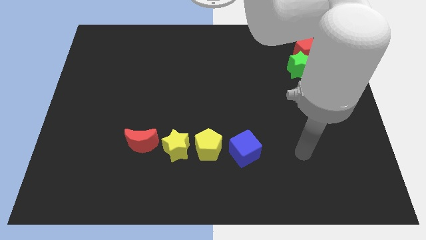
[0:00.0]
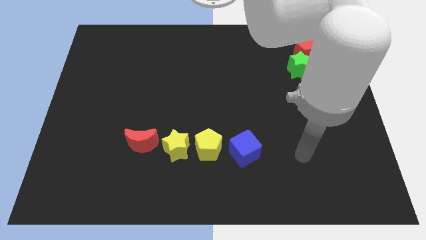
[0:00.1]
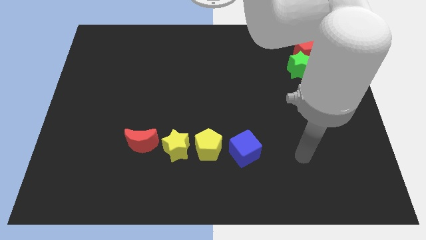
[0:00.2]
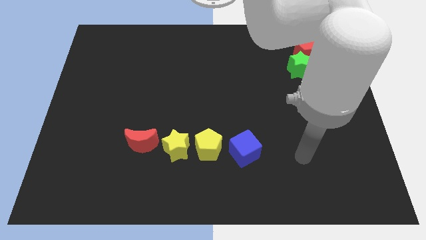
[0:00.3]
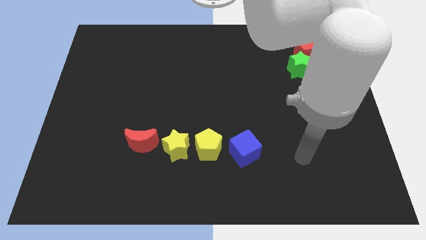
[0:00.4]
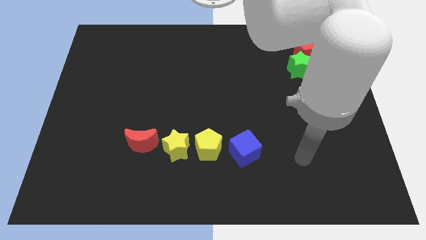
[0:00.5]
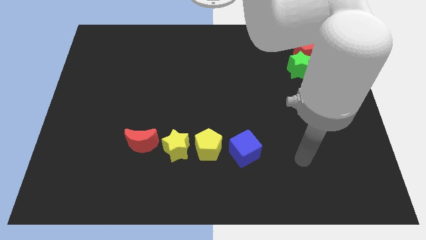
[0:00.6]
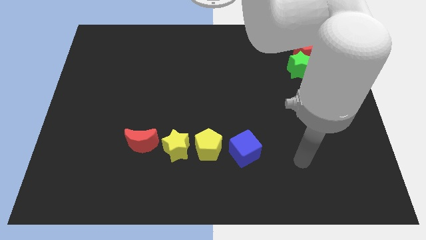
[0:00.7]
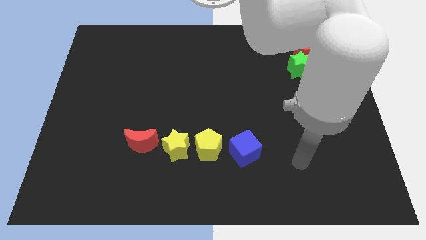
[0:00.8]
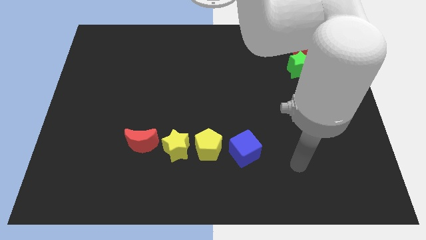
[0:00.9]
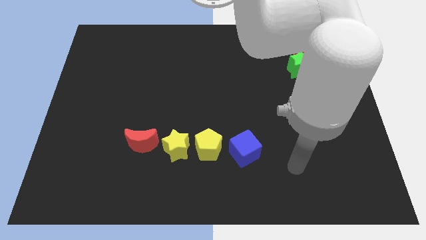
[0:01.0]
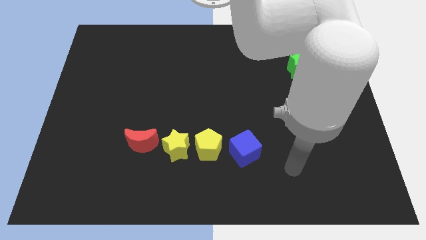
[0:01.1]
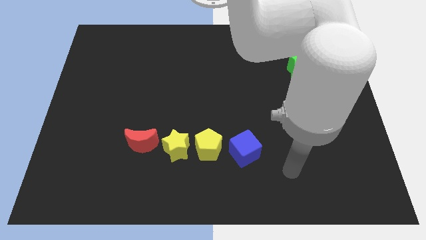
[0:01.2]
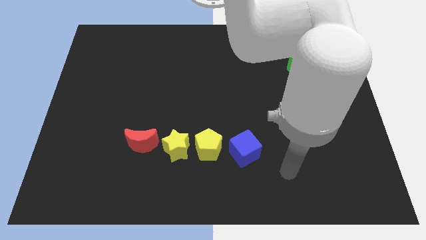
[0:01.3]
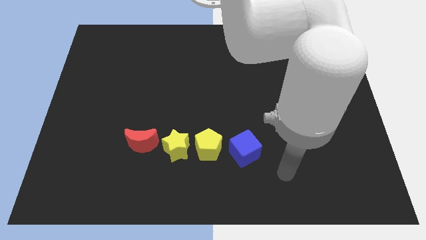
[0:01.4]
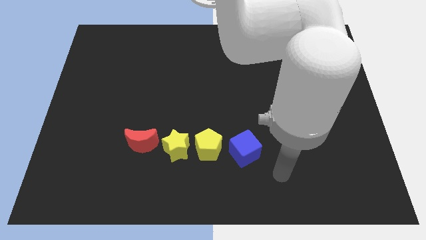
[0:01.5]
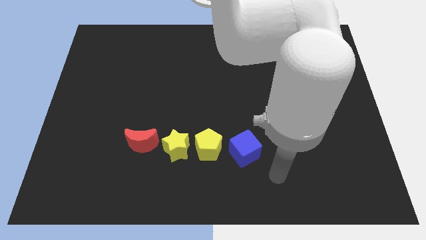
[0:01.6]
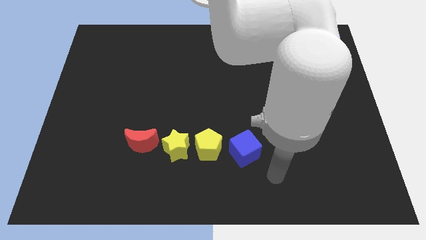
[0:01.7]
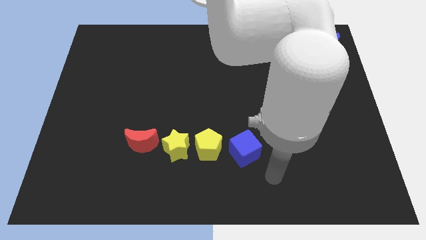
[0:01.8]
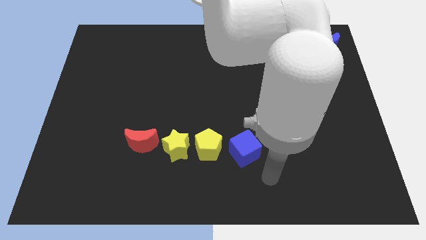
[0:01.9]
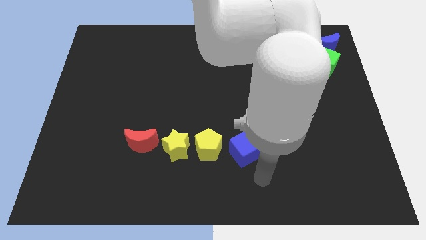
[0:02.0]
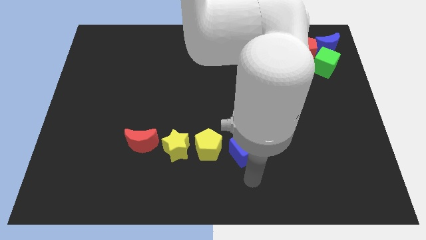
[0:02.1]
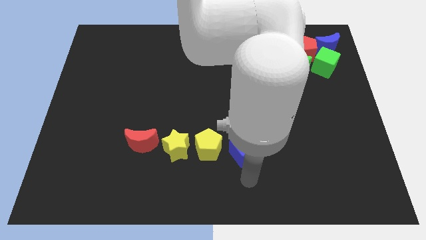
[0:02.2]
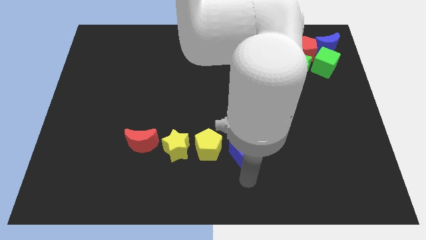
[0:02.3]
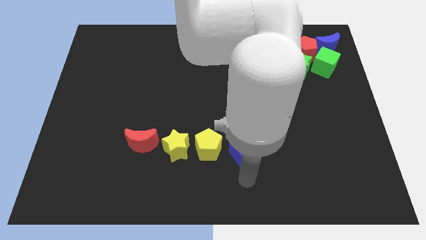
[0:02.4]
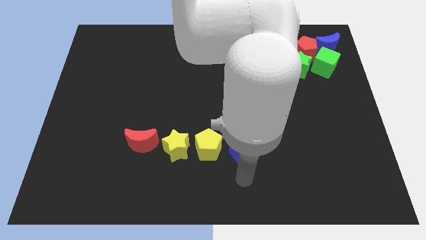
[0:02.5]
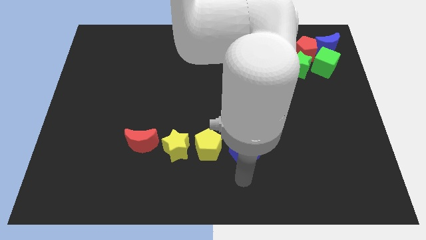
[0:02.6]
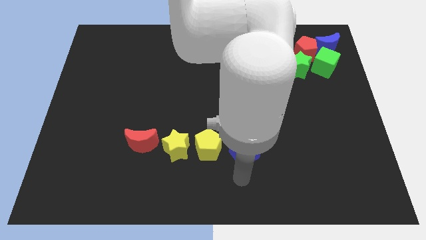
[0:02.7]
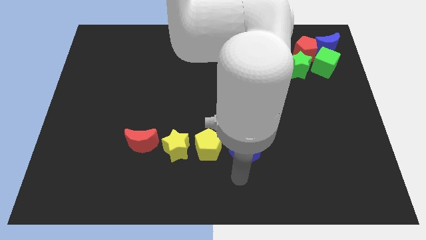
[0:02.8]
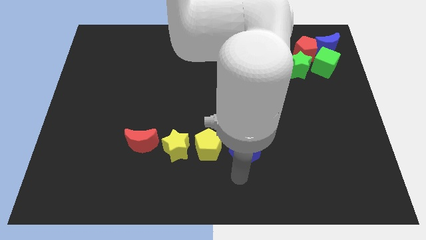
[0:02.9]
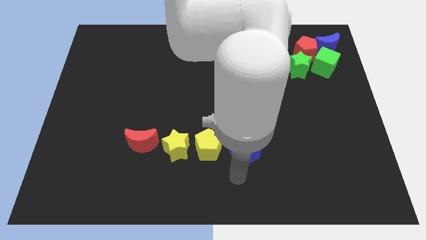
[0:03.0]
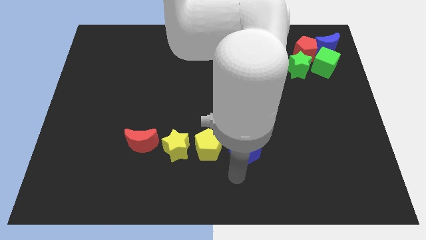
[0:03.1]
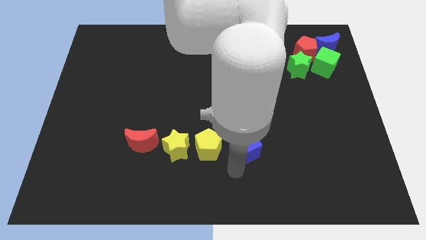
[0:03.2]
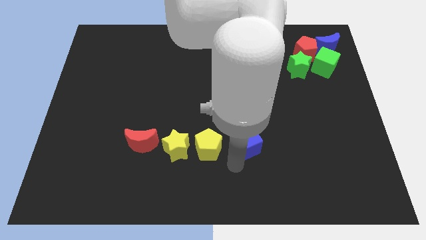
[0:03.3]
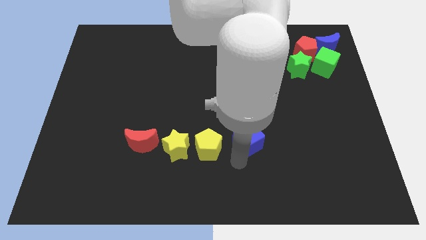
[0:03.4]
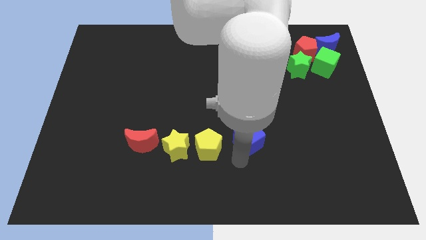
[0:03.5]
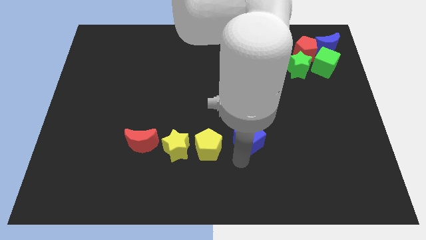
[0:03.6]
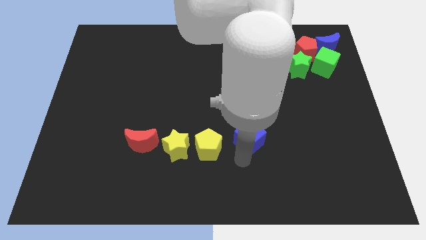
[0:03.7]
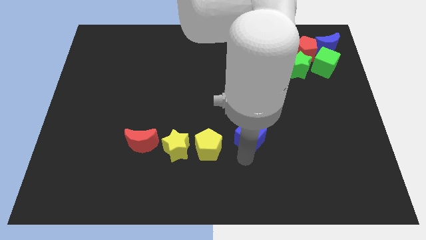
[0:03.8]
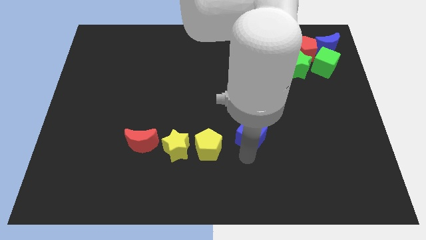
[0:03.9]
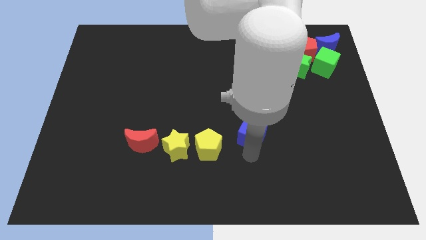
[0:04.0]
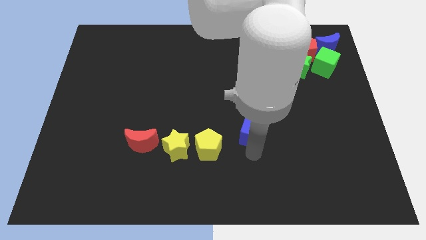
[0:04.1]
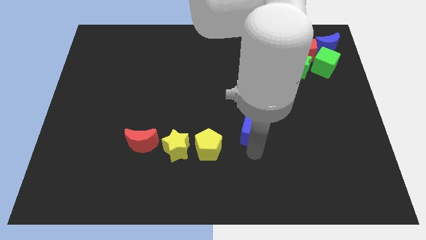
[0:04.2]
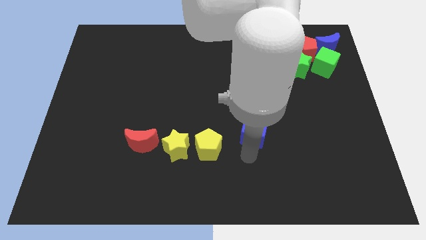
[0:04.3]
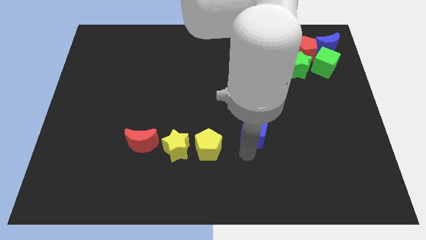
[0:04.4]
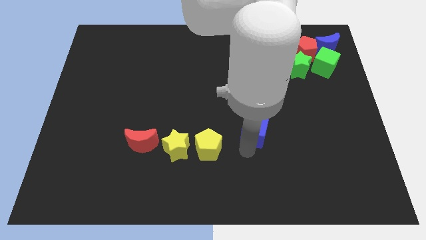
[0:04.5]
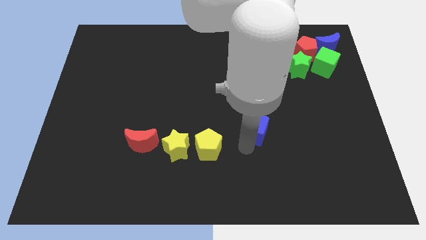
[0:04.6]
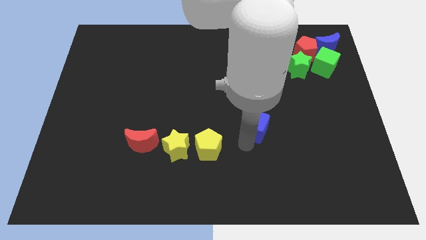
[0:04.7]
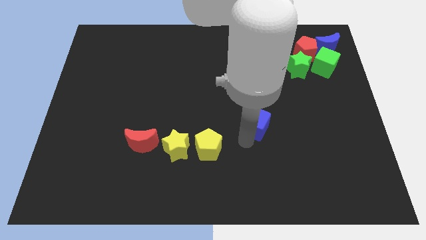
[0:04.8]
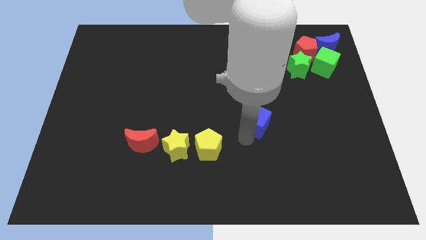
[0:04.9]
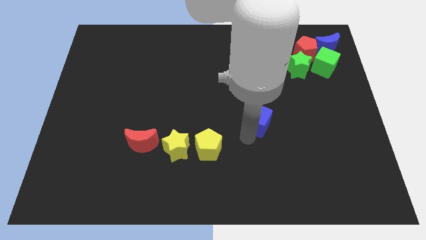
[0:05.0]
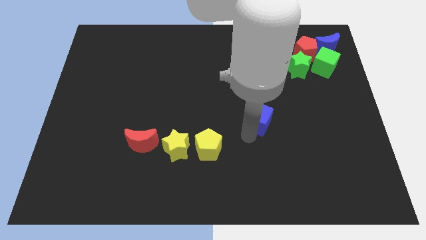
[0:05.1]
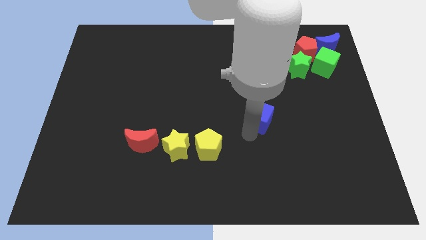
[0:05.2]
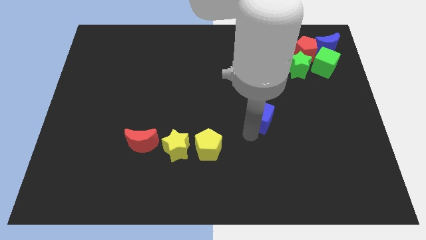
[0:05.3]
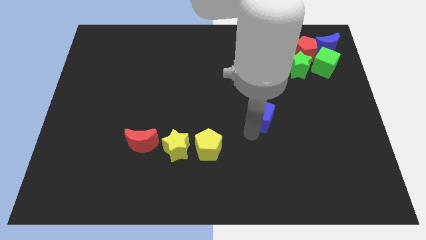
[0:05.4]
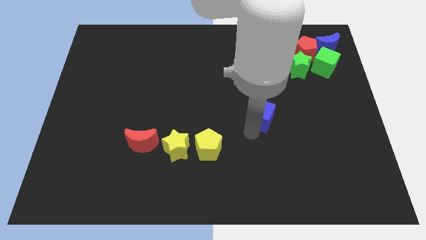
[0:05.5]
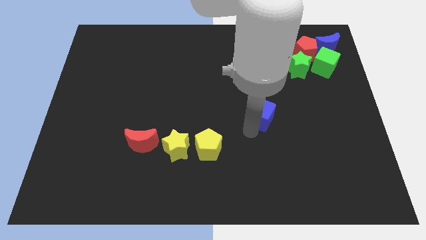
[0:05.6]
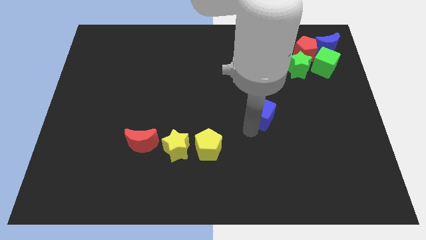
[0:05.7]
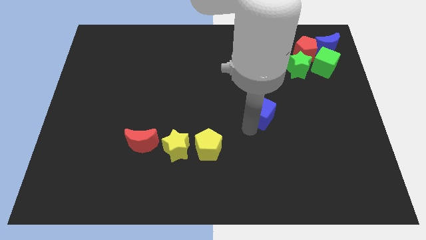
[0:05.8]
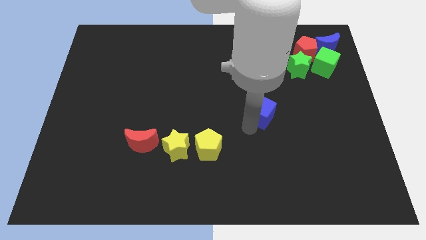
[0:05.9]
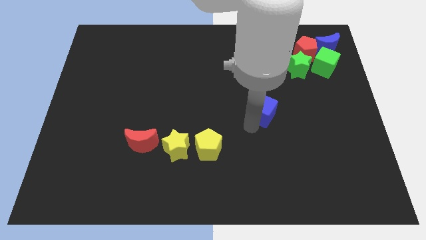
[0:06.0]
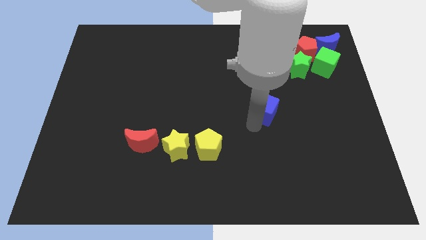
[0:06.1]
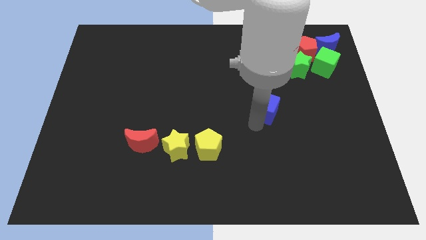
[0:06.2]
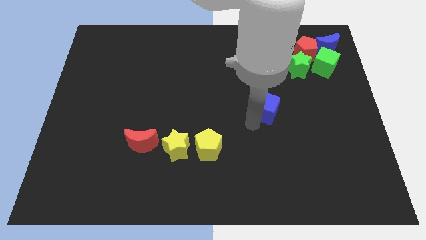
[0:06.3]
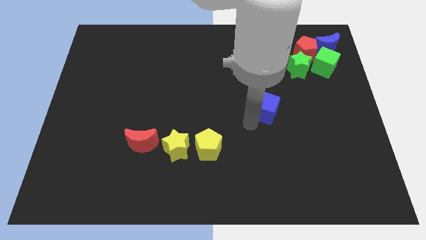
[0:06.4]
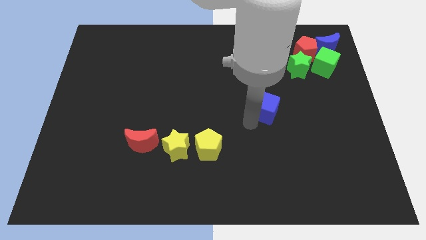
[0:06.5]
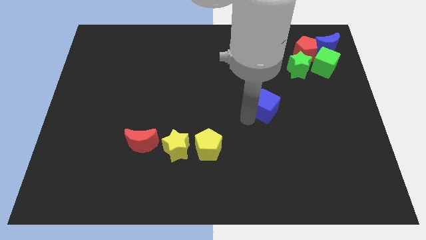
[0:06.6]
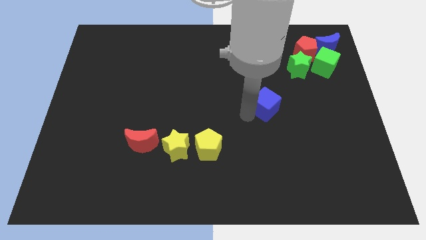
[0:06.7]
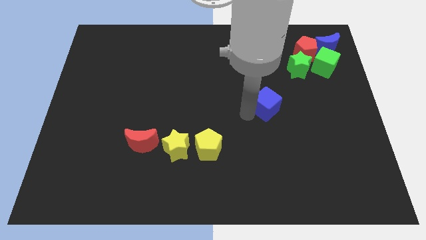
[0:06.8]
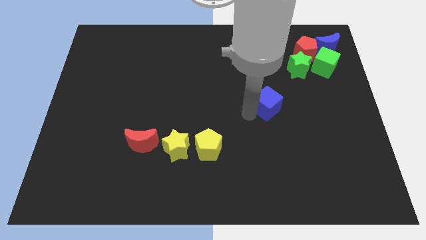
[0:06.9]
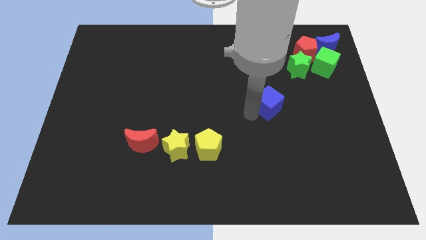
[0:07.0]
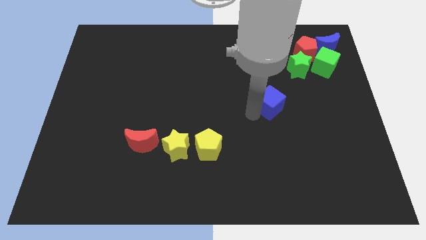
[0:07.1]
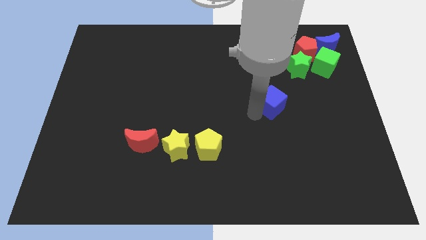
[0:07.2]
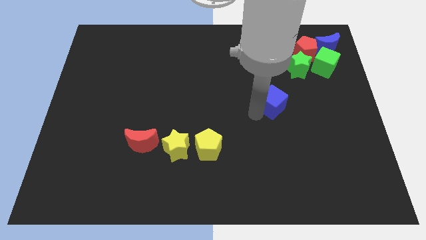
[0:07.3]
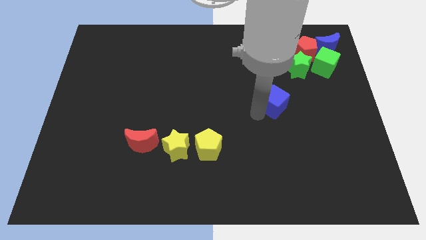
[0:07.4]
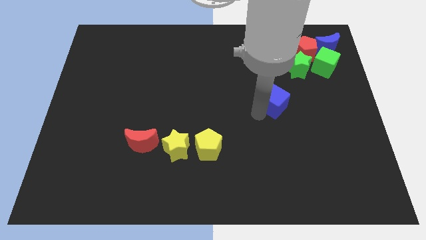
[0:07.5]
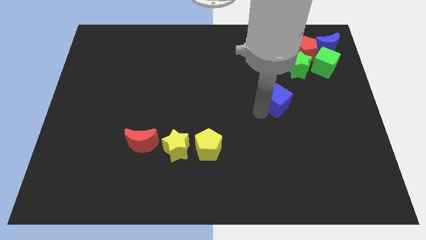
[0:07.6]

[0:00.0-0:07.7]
place the blue cube to the bottom left of the green star

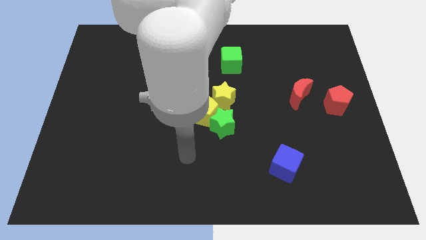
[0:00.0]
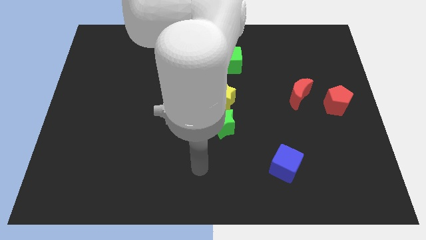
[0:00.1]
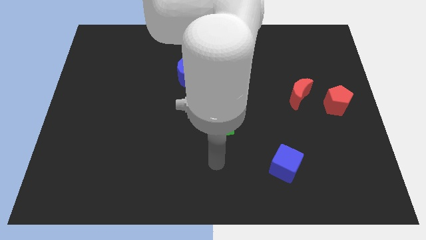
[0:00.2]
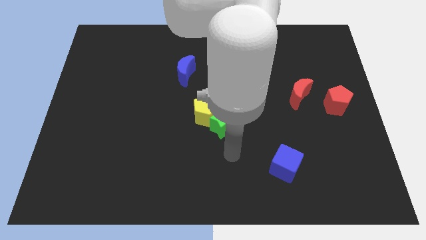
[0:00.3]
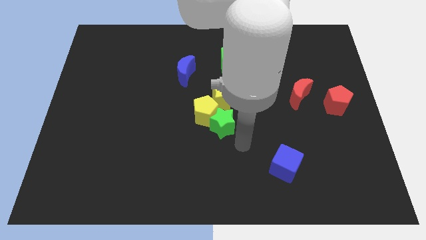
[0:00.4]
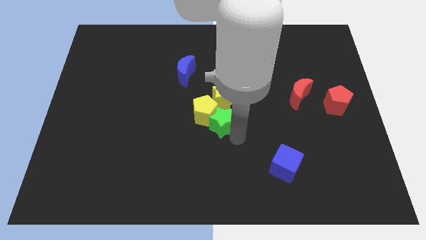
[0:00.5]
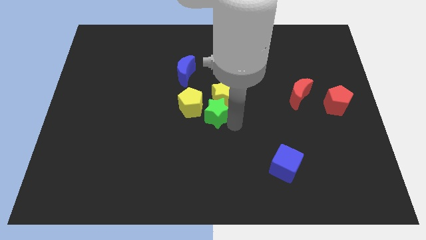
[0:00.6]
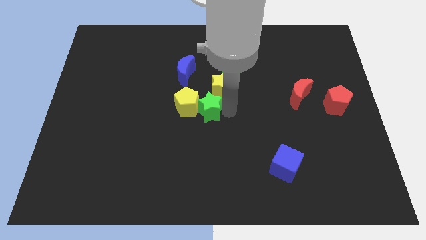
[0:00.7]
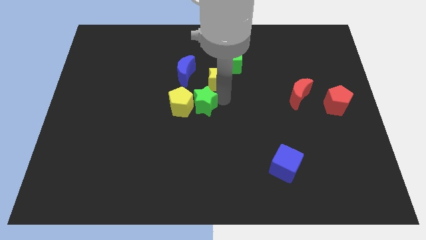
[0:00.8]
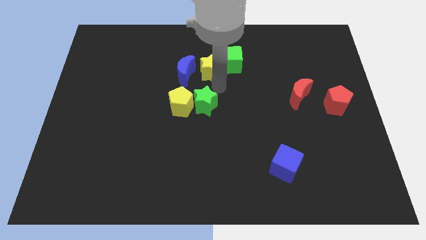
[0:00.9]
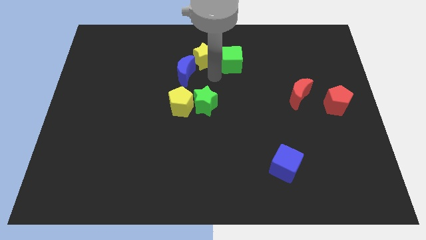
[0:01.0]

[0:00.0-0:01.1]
separate yellow star from green star

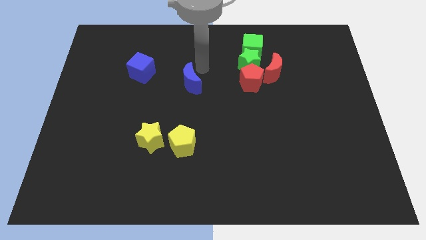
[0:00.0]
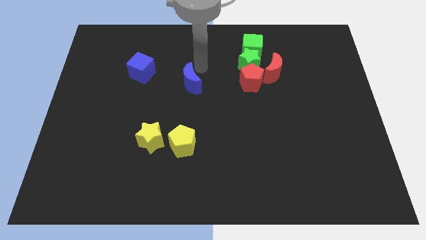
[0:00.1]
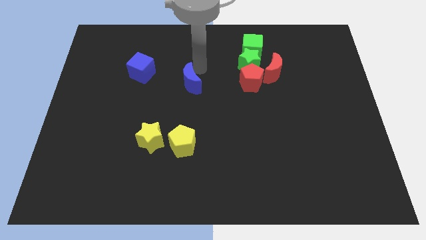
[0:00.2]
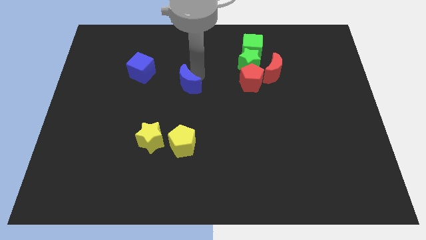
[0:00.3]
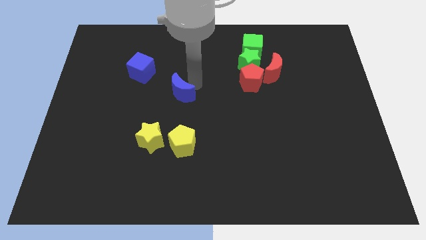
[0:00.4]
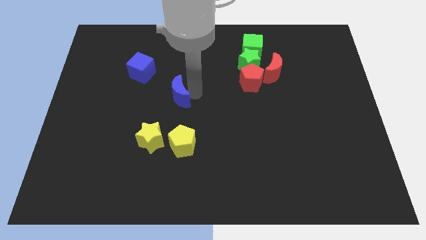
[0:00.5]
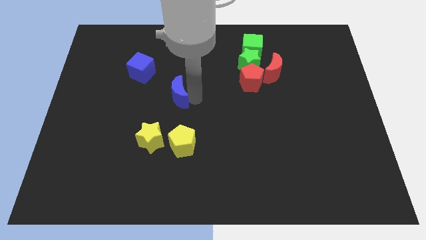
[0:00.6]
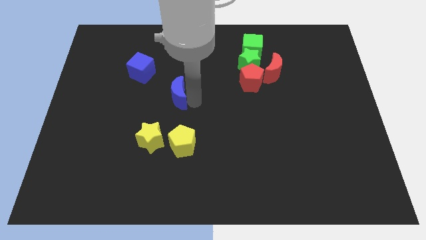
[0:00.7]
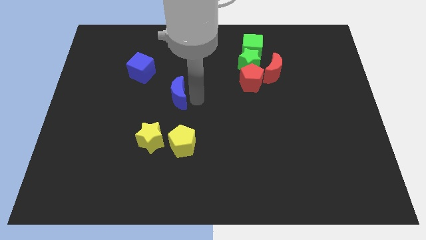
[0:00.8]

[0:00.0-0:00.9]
move blue moon slightly down
